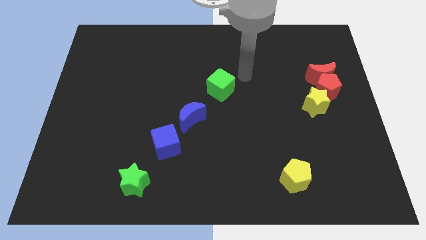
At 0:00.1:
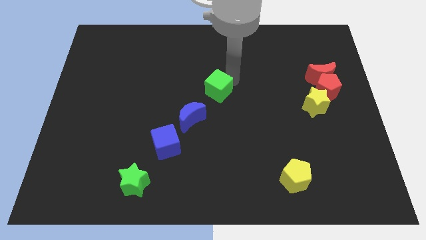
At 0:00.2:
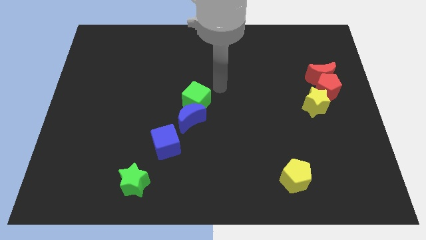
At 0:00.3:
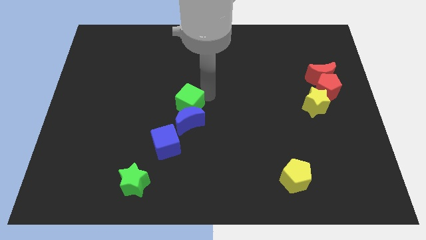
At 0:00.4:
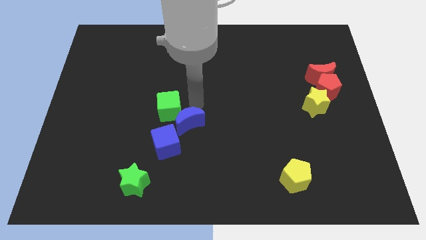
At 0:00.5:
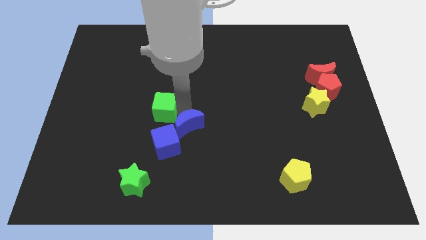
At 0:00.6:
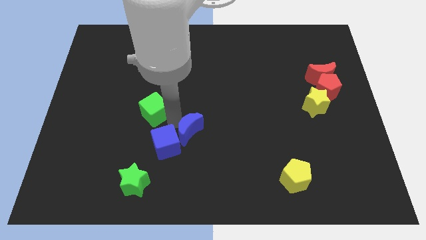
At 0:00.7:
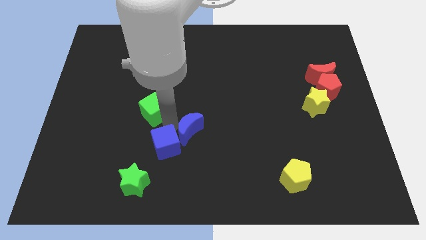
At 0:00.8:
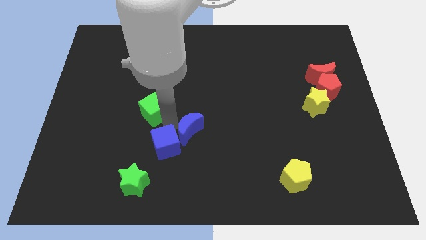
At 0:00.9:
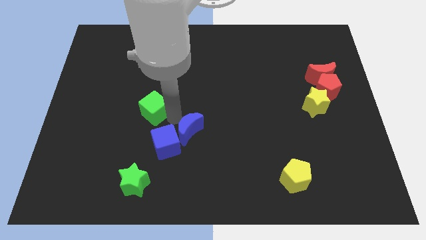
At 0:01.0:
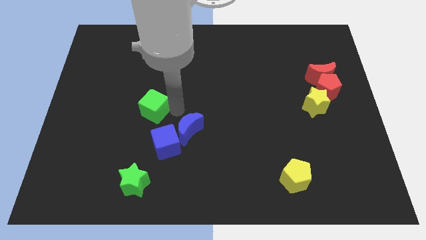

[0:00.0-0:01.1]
move the green cube diagonally top left to the blue block

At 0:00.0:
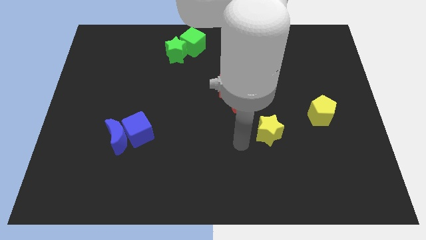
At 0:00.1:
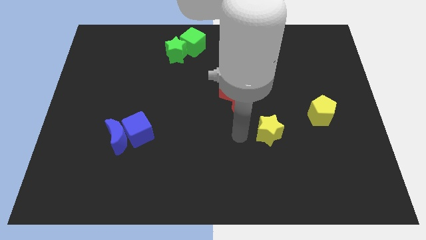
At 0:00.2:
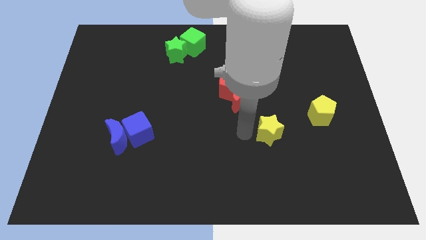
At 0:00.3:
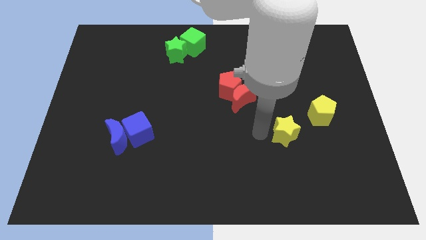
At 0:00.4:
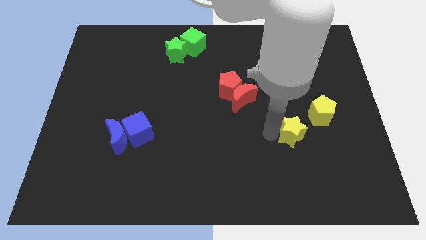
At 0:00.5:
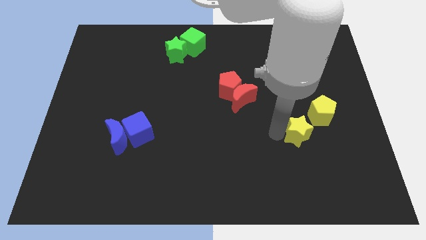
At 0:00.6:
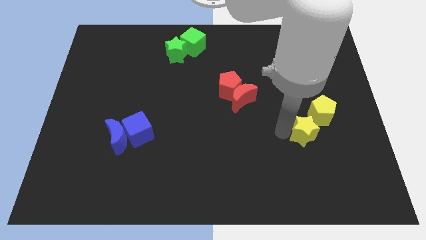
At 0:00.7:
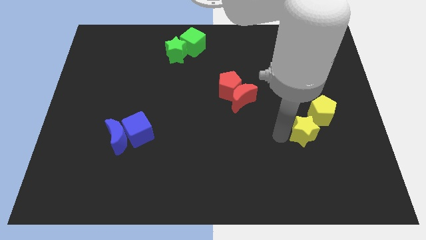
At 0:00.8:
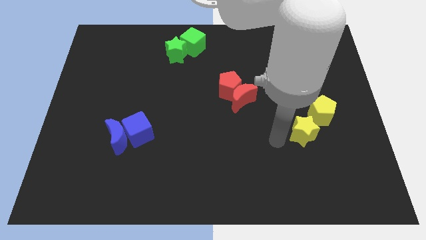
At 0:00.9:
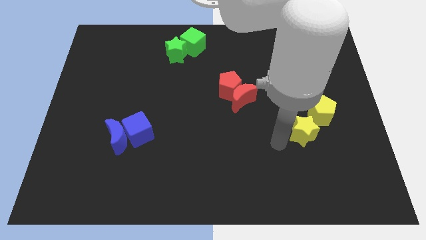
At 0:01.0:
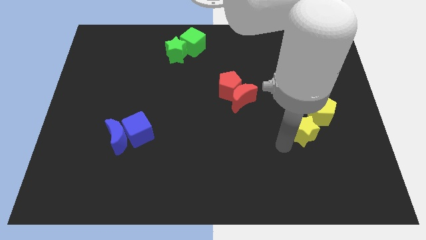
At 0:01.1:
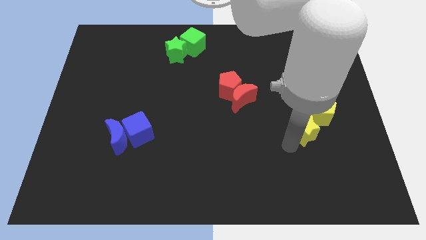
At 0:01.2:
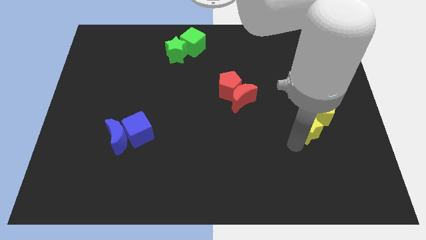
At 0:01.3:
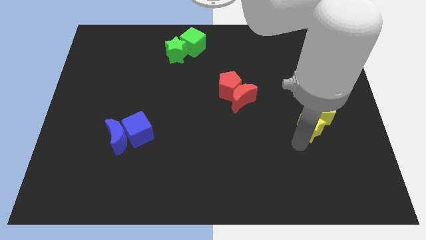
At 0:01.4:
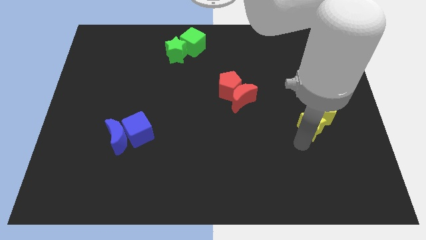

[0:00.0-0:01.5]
push the yellow star into the yellow pentagon

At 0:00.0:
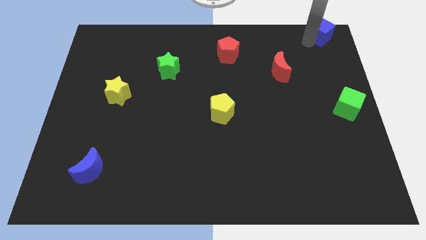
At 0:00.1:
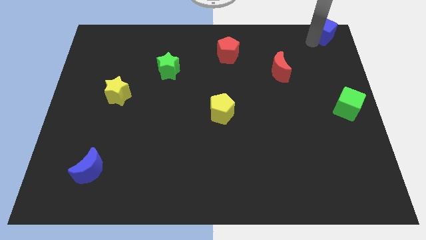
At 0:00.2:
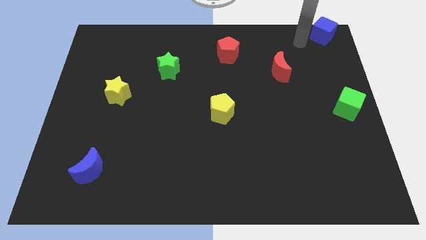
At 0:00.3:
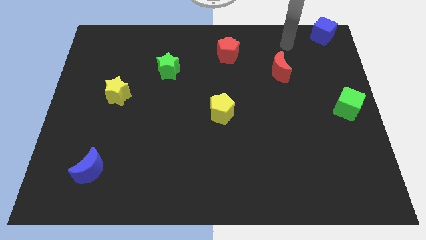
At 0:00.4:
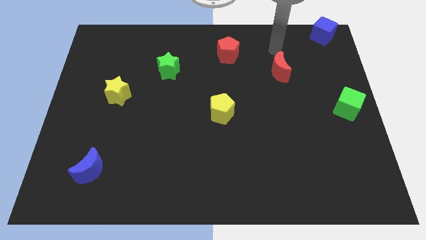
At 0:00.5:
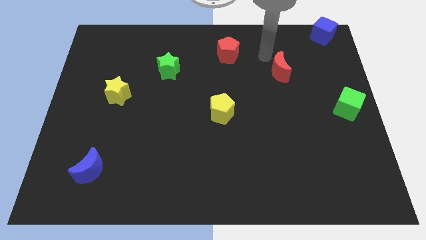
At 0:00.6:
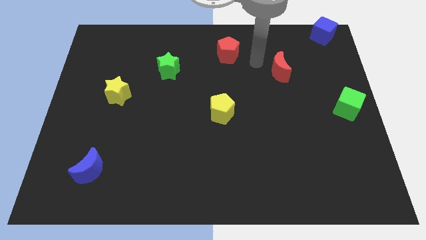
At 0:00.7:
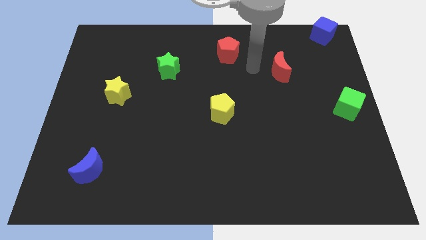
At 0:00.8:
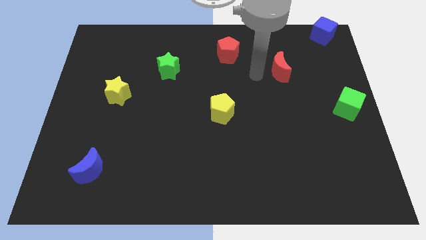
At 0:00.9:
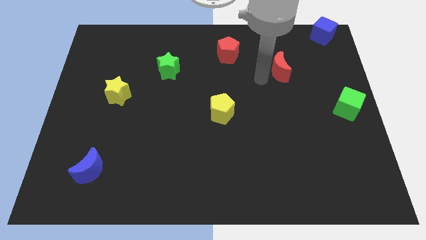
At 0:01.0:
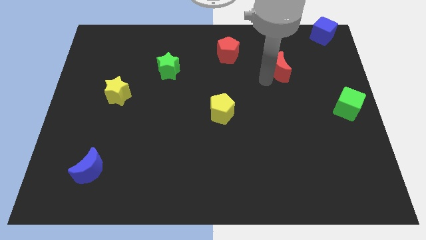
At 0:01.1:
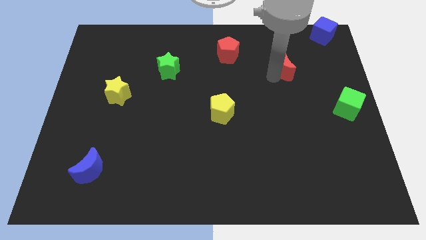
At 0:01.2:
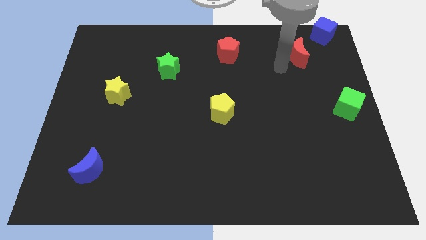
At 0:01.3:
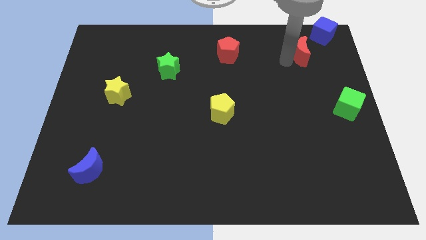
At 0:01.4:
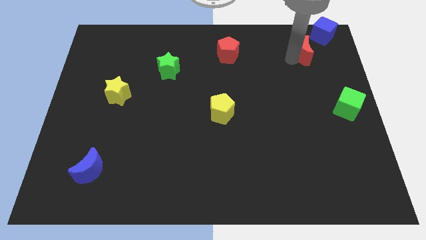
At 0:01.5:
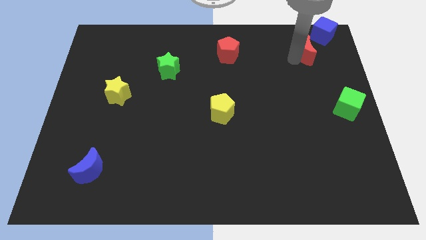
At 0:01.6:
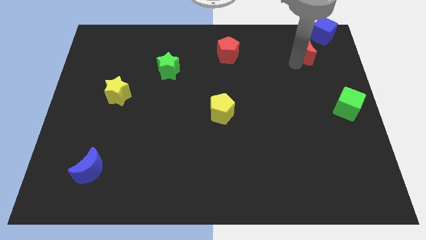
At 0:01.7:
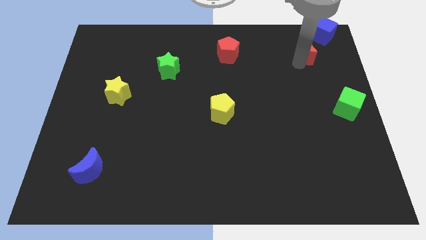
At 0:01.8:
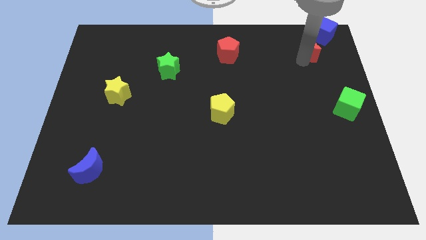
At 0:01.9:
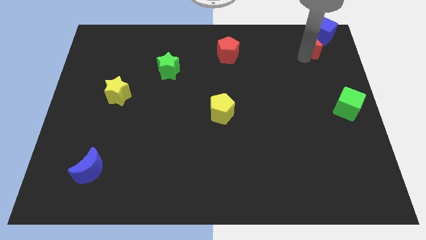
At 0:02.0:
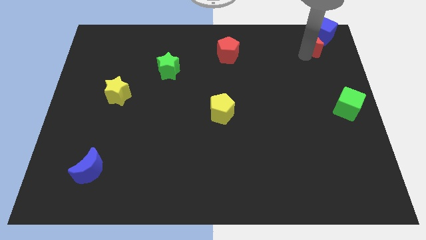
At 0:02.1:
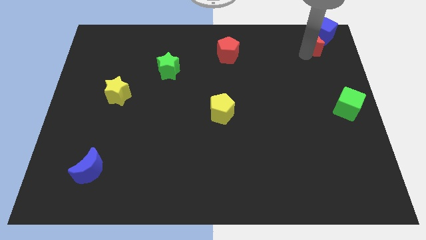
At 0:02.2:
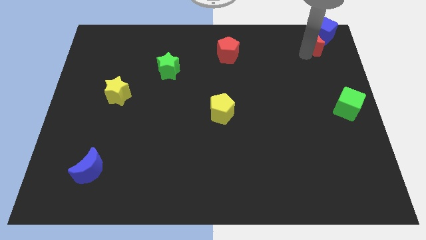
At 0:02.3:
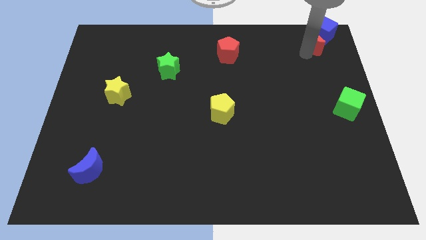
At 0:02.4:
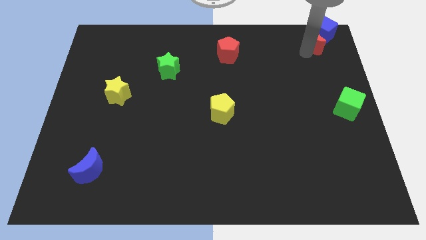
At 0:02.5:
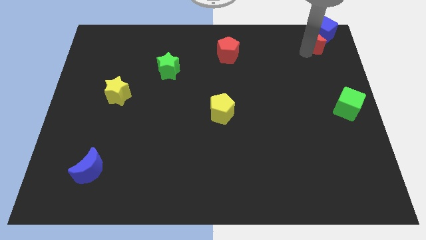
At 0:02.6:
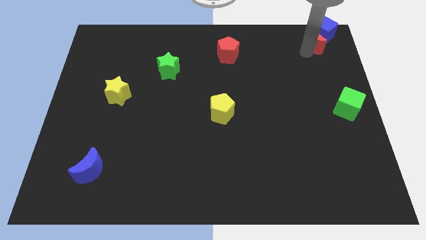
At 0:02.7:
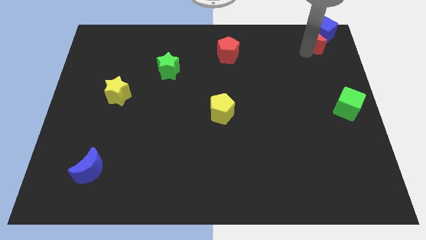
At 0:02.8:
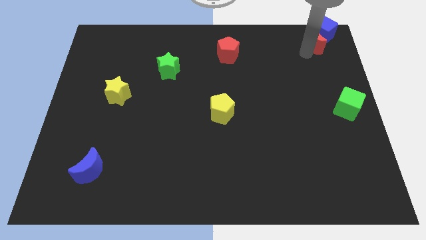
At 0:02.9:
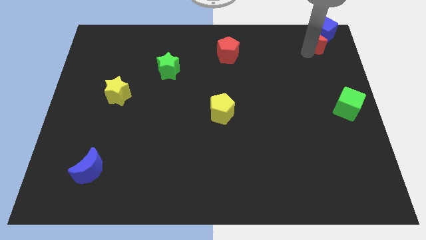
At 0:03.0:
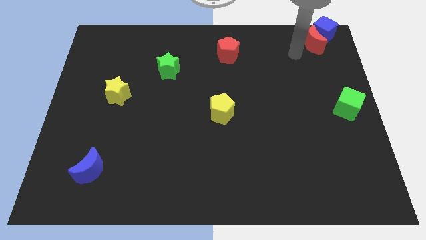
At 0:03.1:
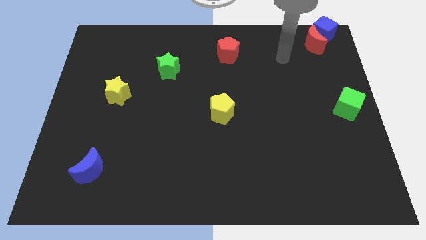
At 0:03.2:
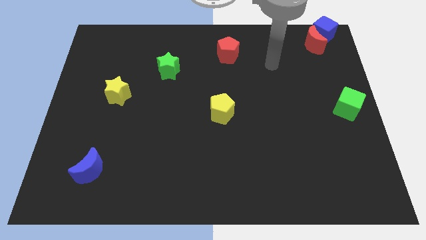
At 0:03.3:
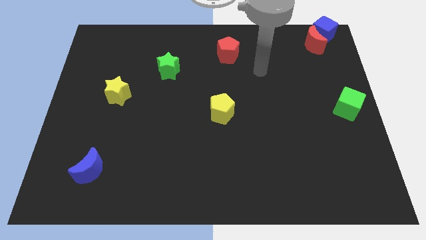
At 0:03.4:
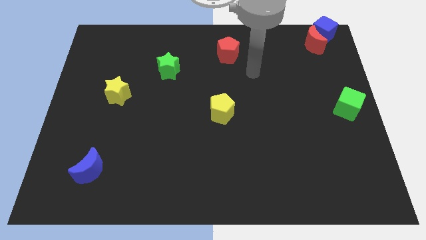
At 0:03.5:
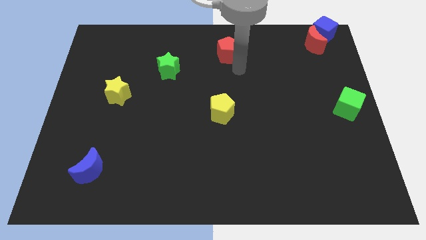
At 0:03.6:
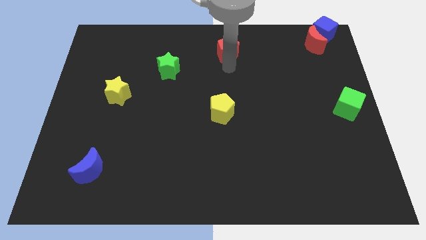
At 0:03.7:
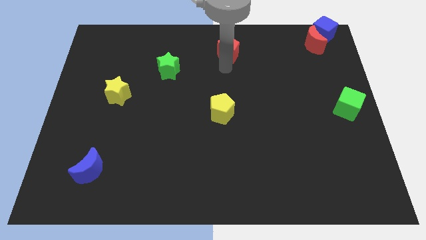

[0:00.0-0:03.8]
move the red moon closer to the blue moon

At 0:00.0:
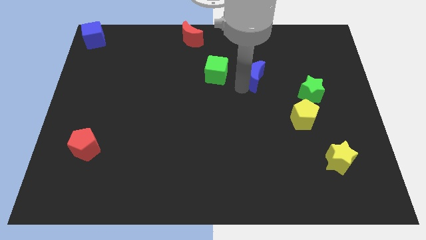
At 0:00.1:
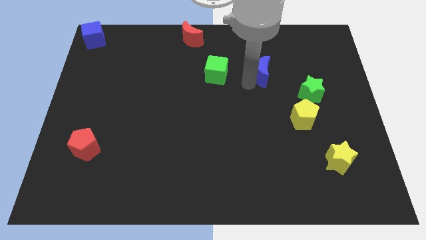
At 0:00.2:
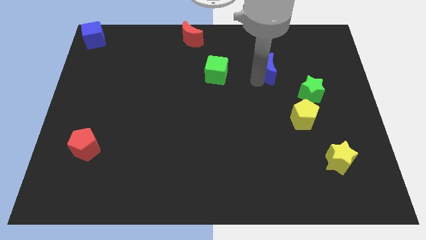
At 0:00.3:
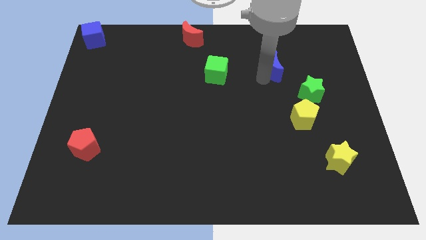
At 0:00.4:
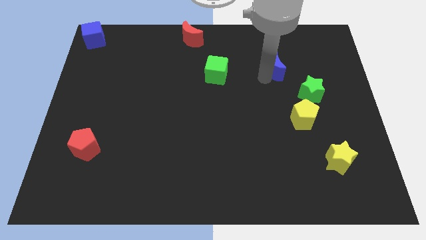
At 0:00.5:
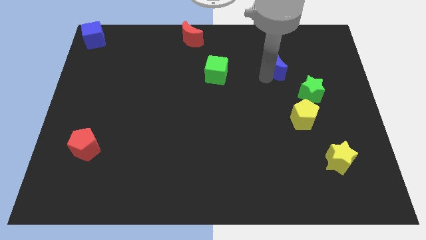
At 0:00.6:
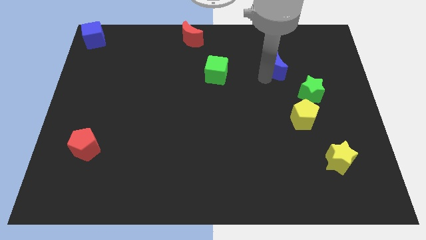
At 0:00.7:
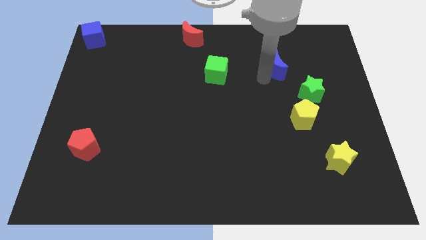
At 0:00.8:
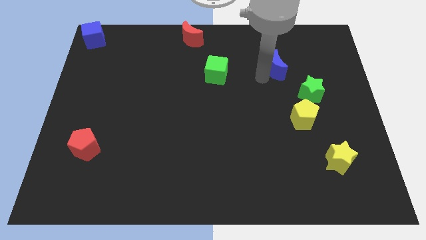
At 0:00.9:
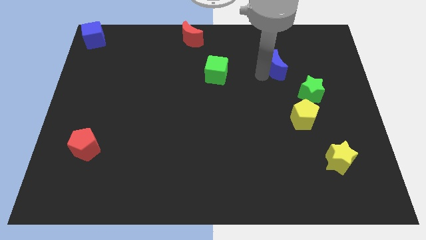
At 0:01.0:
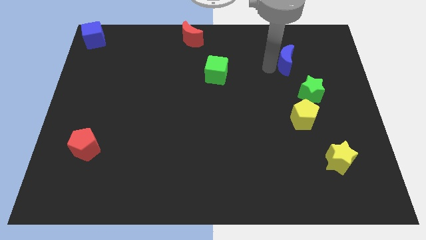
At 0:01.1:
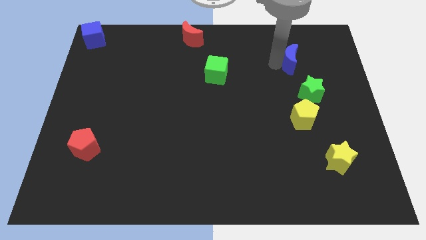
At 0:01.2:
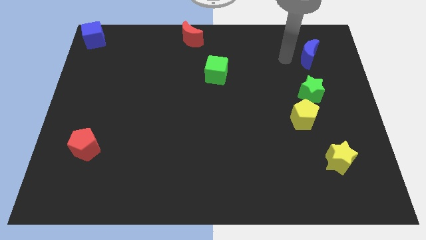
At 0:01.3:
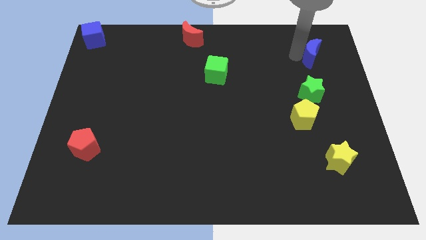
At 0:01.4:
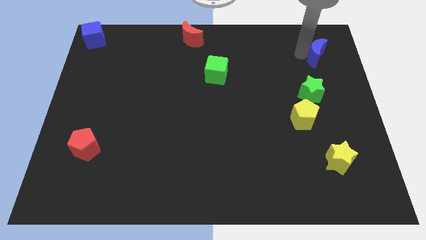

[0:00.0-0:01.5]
push the blue moon towards the top right corner of the board

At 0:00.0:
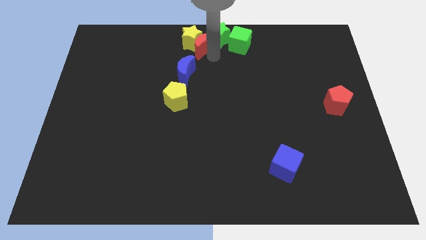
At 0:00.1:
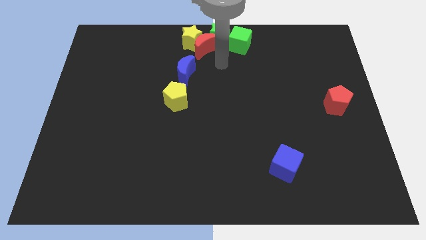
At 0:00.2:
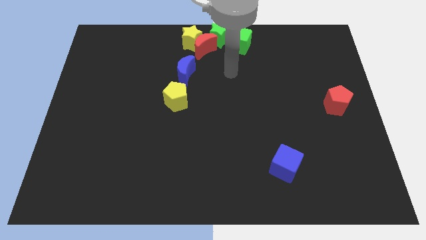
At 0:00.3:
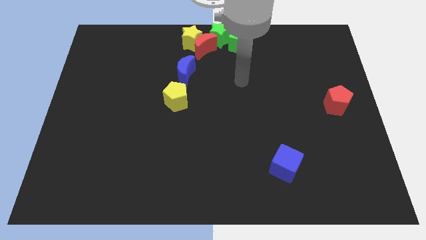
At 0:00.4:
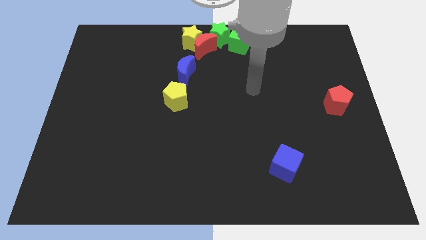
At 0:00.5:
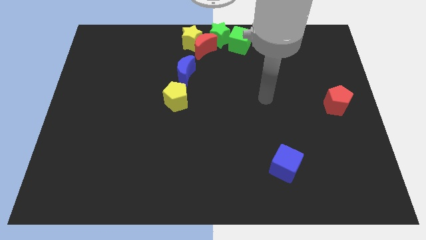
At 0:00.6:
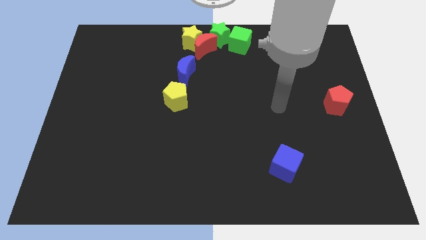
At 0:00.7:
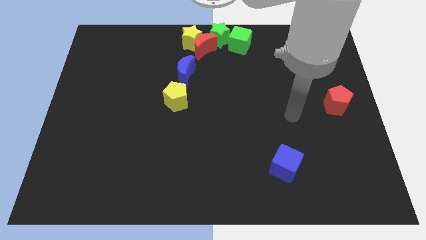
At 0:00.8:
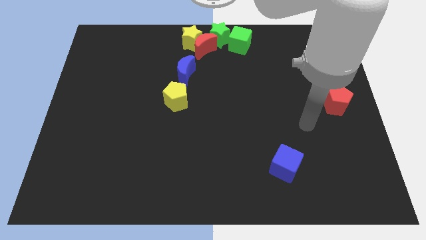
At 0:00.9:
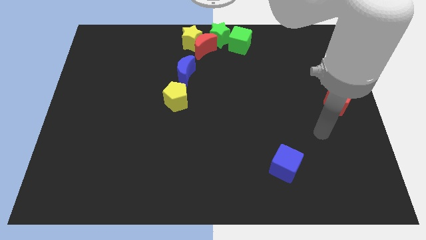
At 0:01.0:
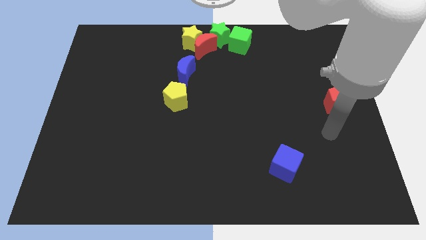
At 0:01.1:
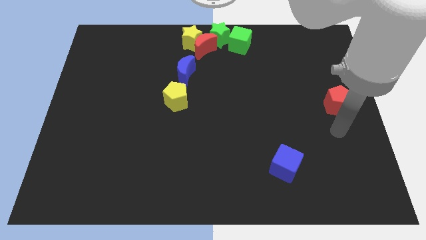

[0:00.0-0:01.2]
move your arm away from red moon
